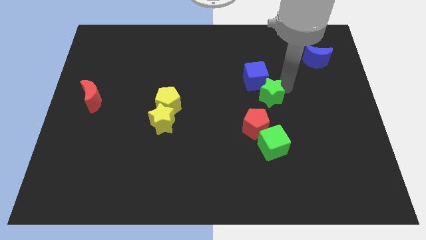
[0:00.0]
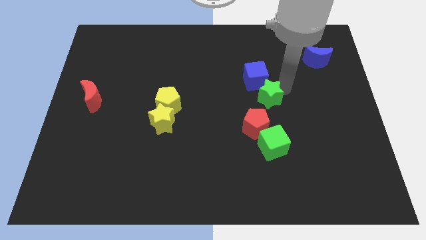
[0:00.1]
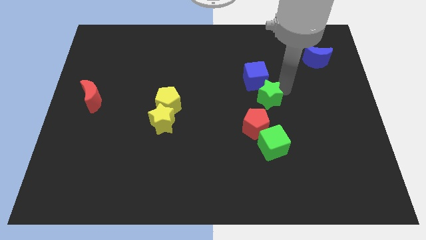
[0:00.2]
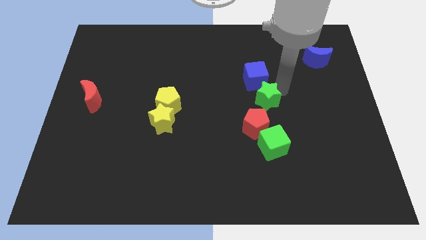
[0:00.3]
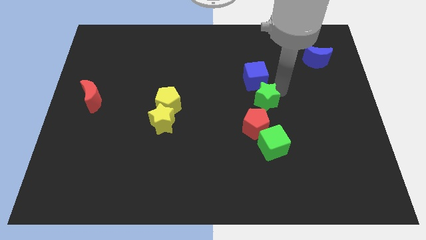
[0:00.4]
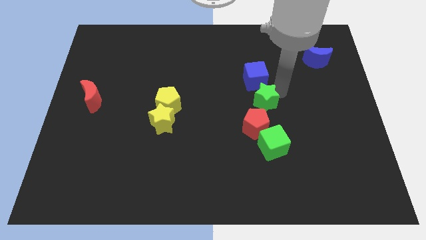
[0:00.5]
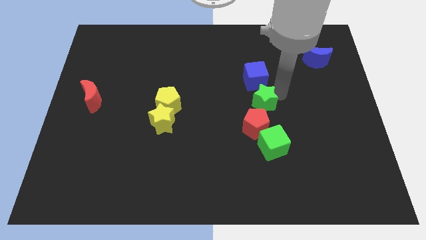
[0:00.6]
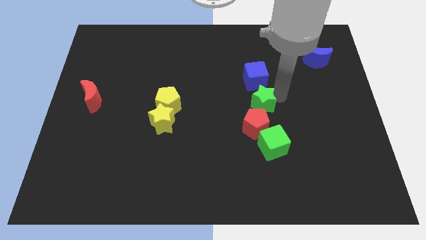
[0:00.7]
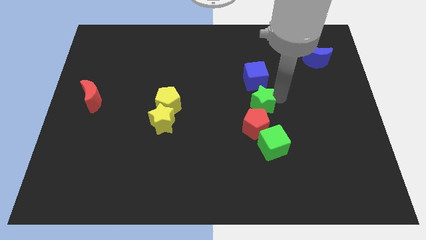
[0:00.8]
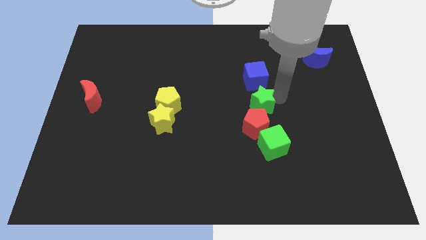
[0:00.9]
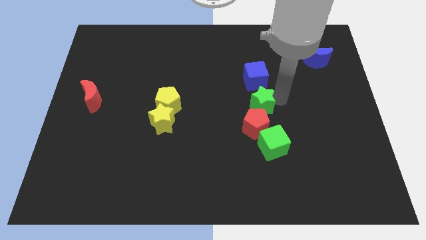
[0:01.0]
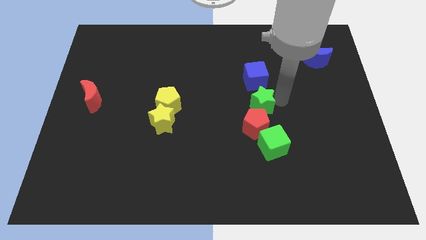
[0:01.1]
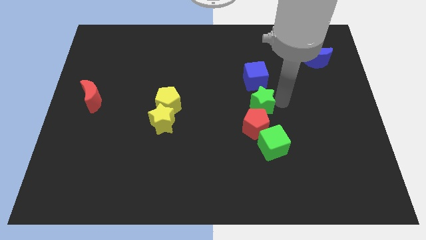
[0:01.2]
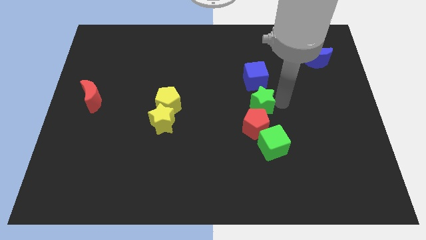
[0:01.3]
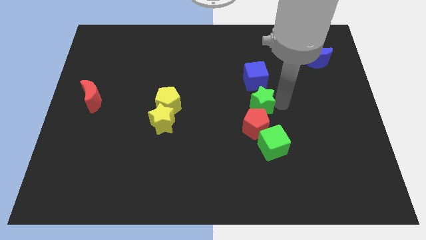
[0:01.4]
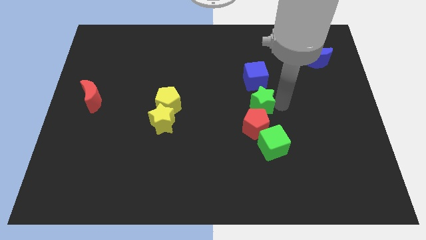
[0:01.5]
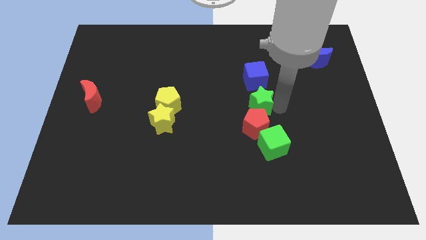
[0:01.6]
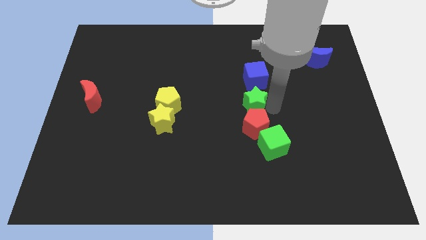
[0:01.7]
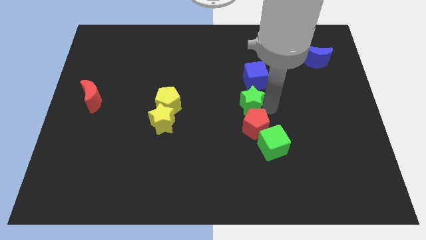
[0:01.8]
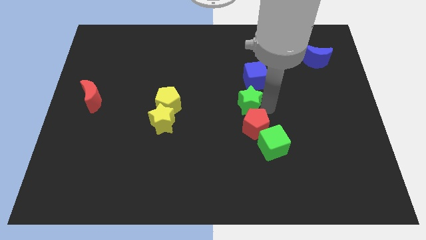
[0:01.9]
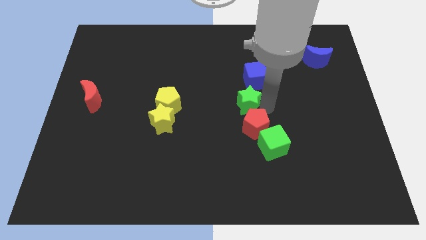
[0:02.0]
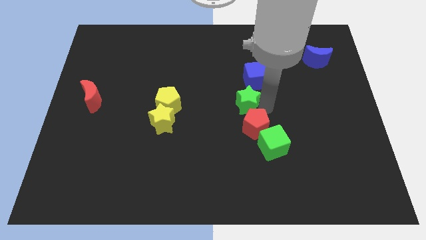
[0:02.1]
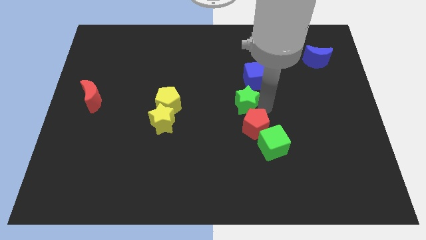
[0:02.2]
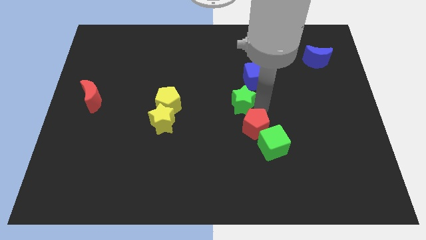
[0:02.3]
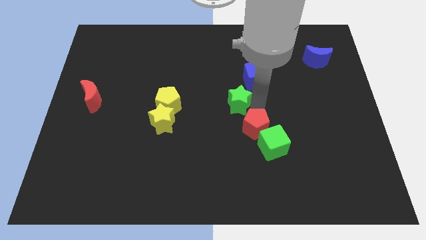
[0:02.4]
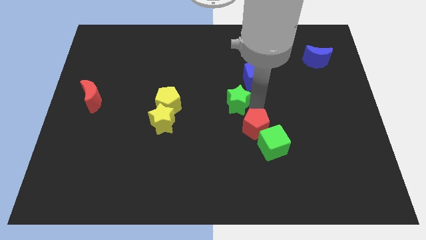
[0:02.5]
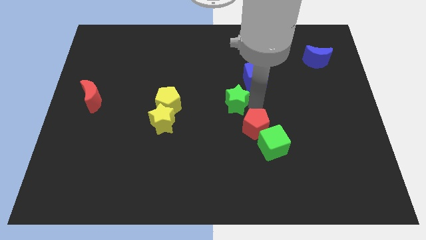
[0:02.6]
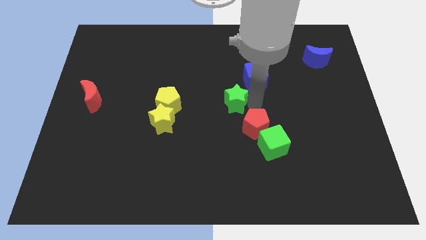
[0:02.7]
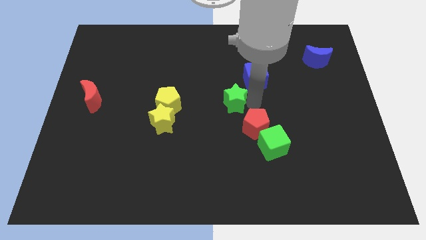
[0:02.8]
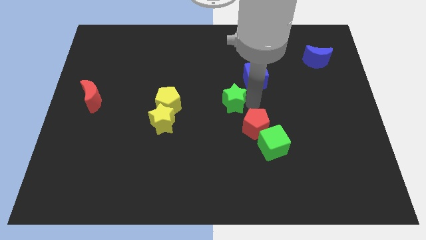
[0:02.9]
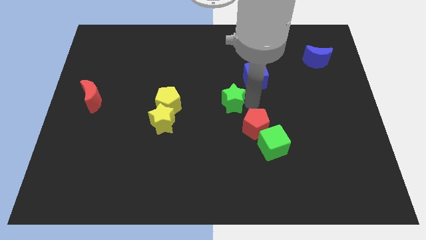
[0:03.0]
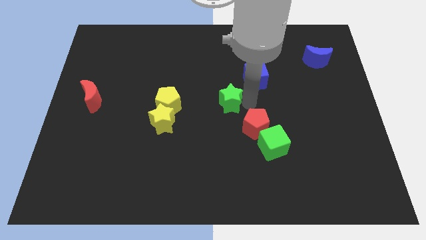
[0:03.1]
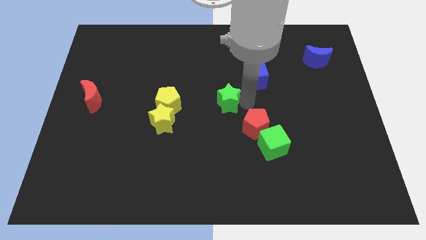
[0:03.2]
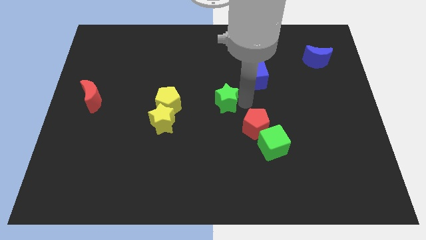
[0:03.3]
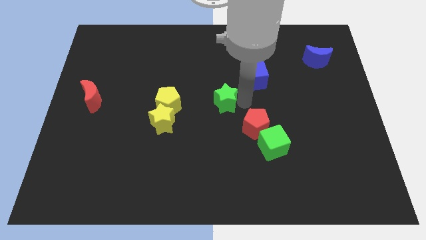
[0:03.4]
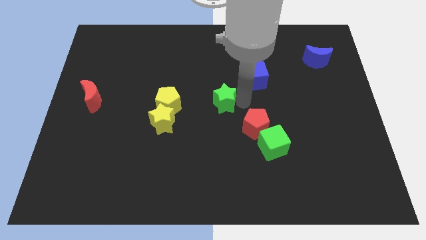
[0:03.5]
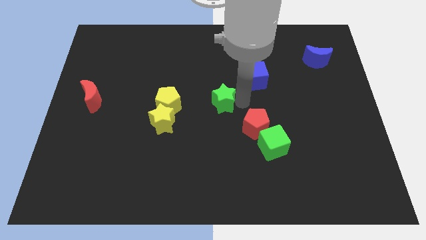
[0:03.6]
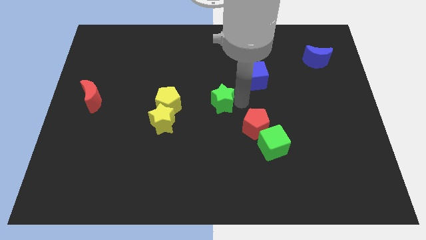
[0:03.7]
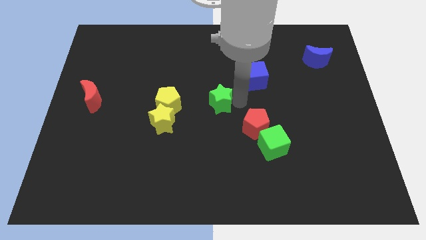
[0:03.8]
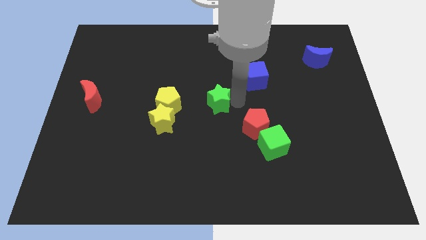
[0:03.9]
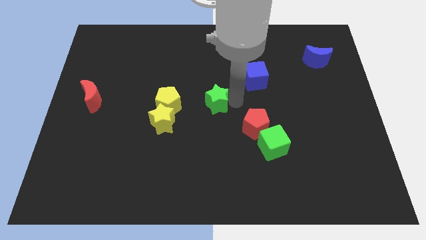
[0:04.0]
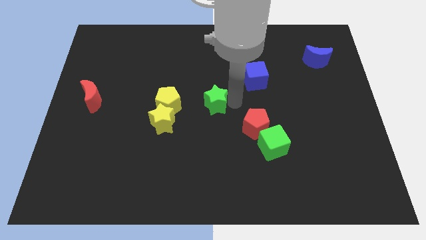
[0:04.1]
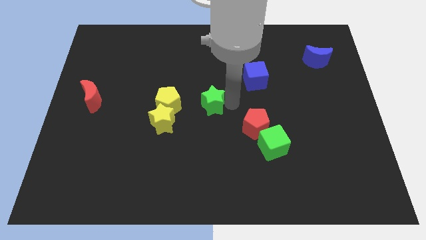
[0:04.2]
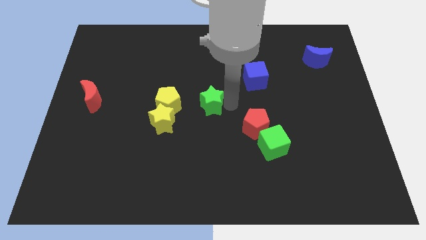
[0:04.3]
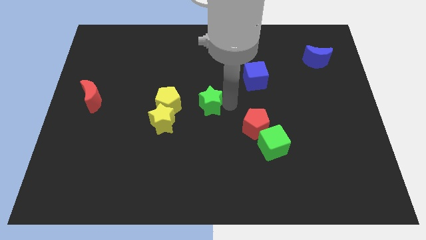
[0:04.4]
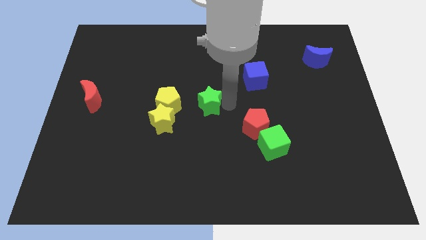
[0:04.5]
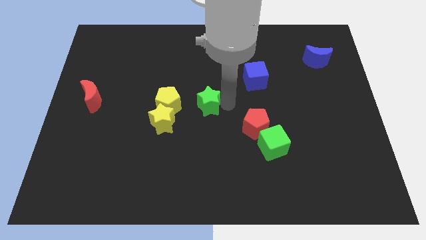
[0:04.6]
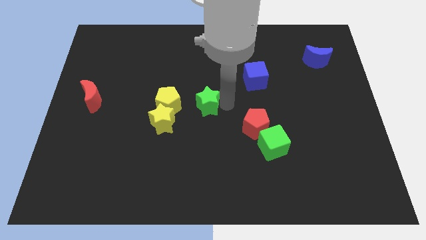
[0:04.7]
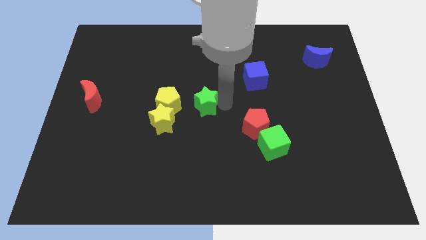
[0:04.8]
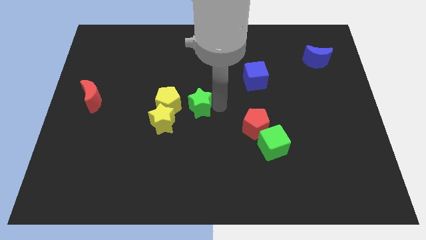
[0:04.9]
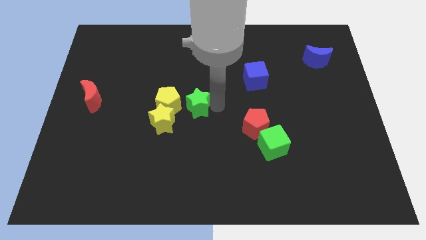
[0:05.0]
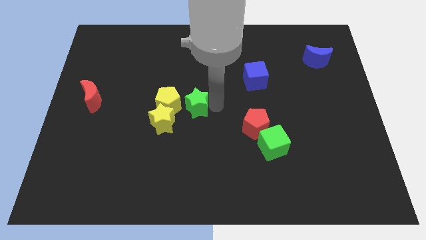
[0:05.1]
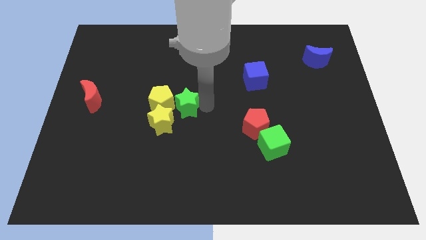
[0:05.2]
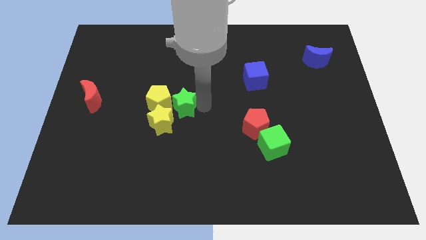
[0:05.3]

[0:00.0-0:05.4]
push the green star to the right of the yellow pentagon

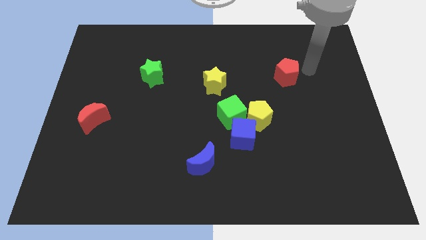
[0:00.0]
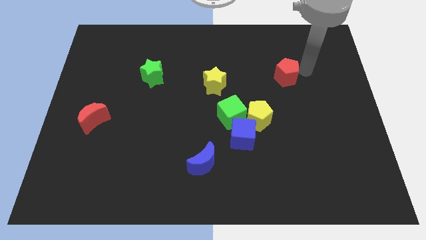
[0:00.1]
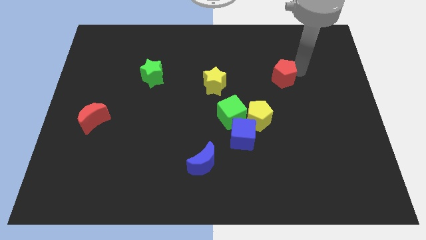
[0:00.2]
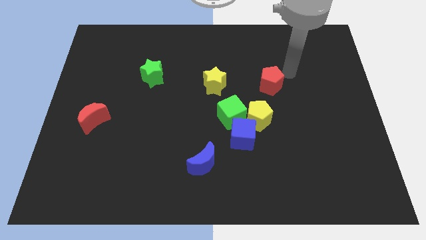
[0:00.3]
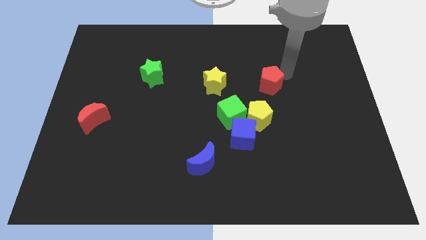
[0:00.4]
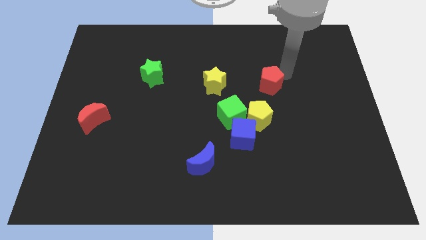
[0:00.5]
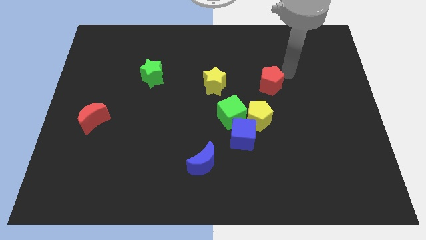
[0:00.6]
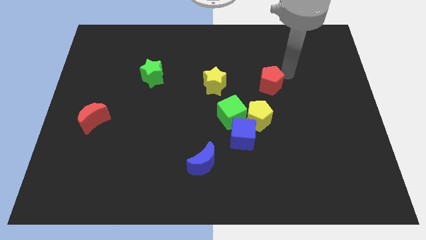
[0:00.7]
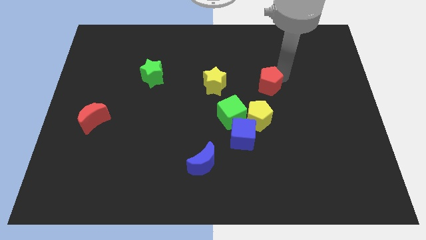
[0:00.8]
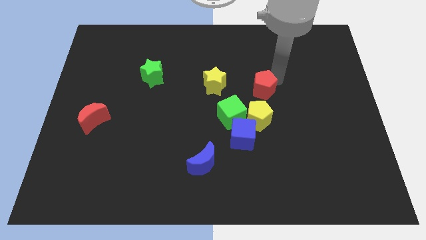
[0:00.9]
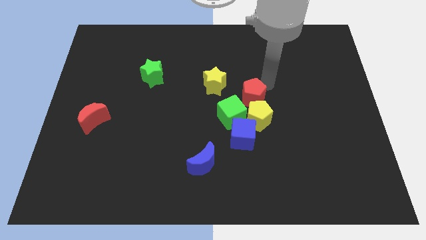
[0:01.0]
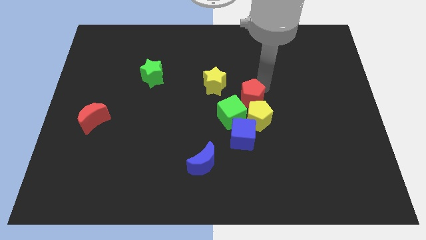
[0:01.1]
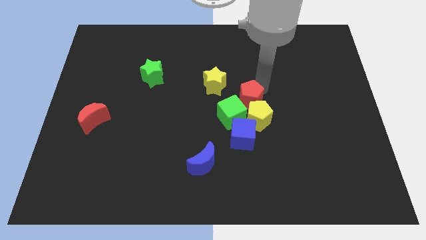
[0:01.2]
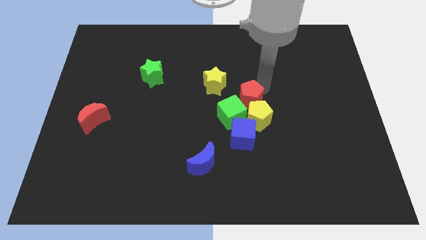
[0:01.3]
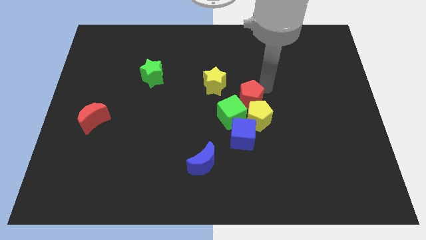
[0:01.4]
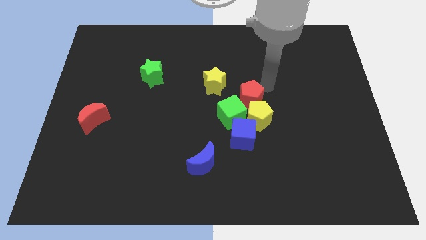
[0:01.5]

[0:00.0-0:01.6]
push the red pentagon towards the on top of the yellow pentagon

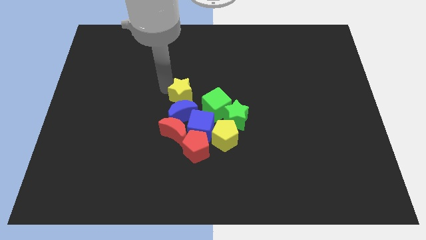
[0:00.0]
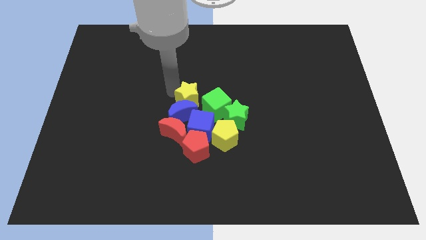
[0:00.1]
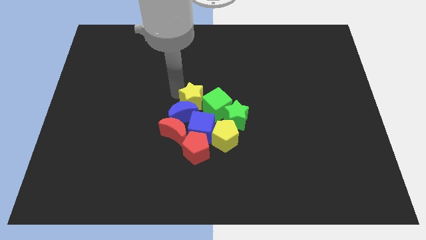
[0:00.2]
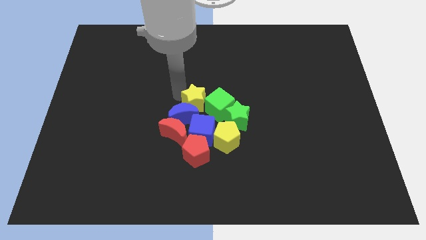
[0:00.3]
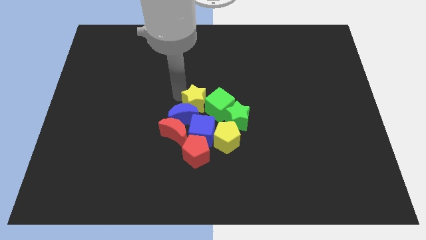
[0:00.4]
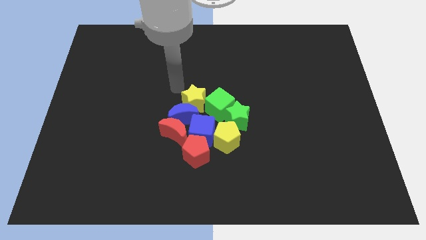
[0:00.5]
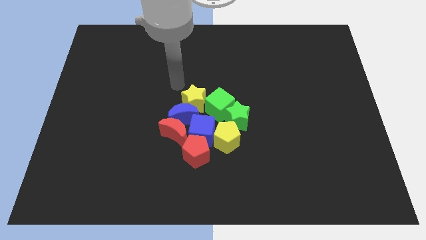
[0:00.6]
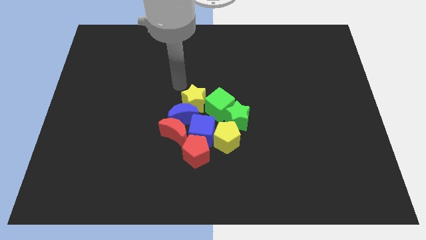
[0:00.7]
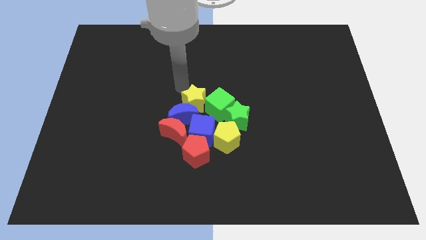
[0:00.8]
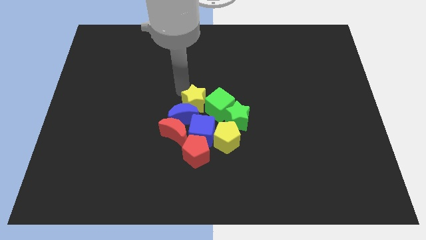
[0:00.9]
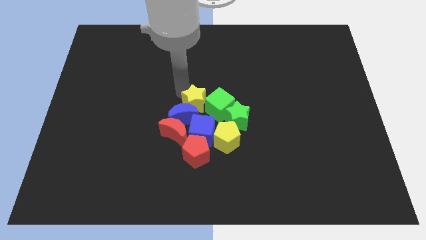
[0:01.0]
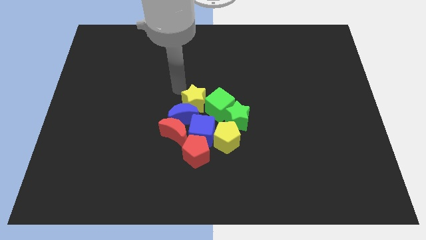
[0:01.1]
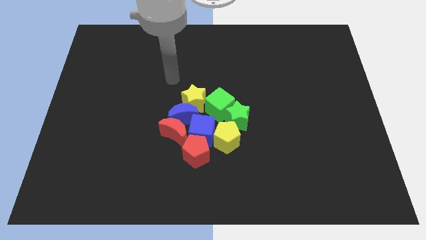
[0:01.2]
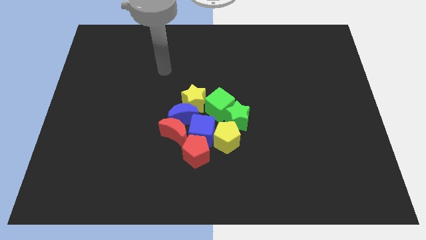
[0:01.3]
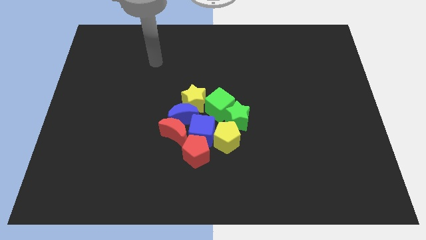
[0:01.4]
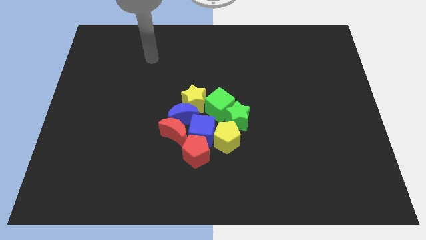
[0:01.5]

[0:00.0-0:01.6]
push the yellow star into the blue crescent and green cube from the top

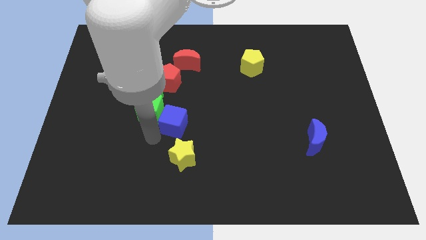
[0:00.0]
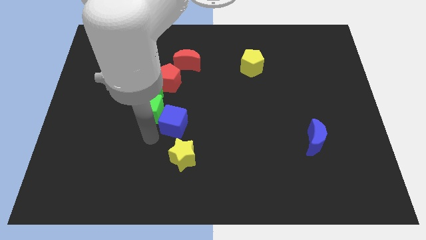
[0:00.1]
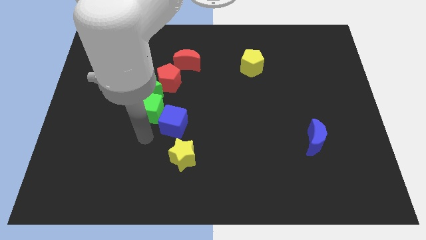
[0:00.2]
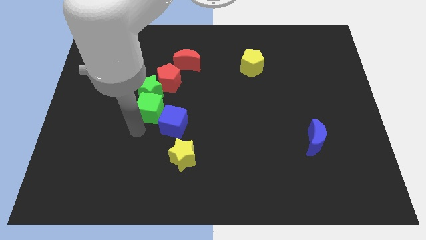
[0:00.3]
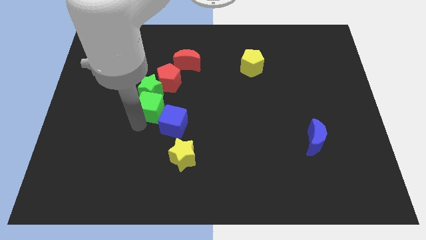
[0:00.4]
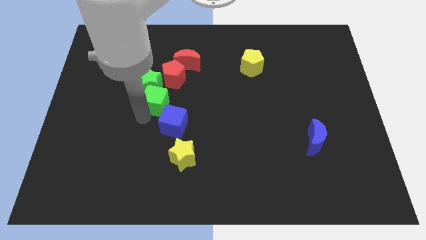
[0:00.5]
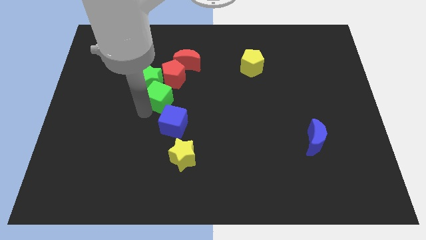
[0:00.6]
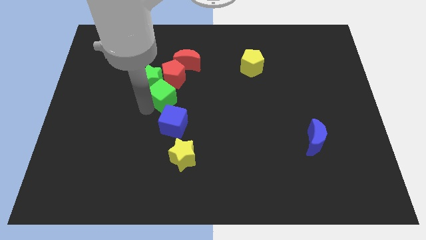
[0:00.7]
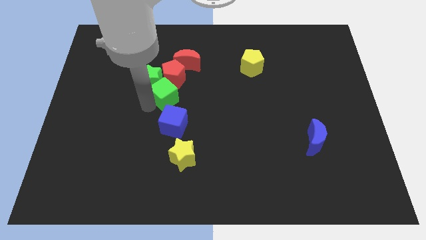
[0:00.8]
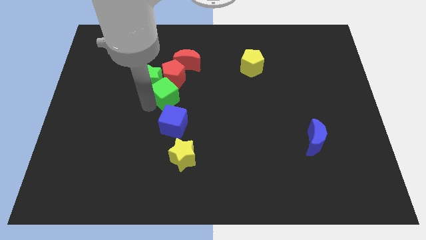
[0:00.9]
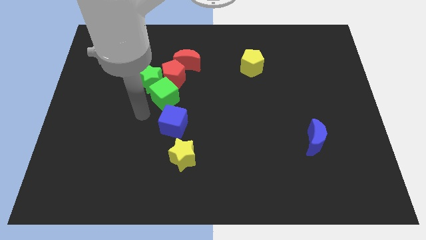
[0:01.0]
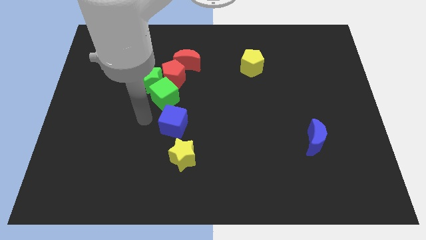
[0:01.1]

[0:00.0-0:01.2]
put the green cube above the blue cube
